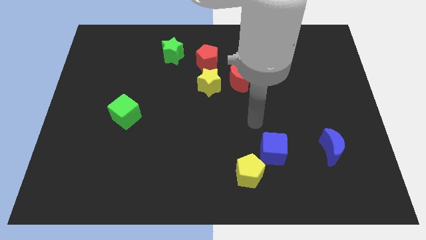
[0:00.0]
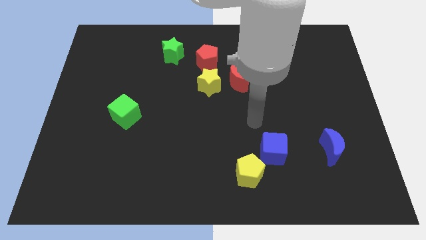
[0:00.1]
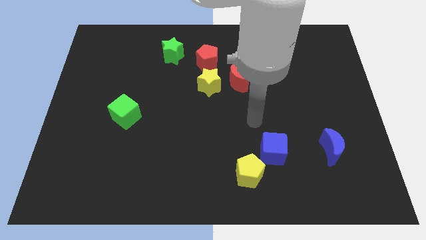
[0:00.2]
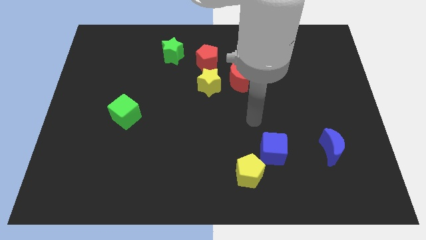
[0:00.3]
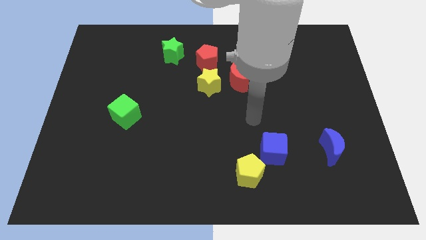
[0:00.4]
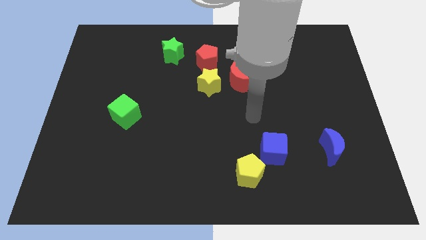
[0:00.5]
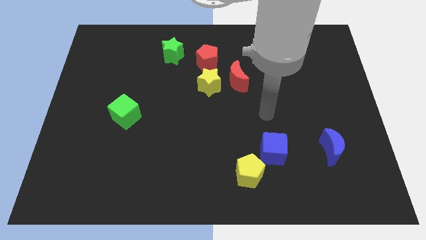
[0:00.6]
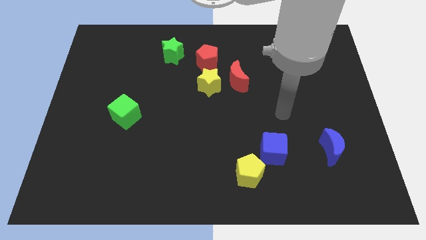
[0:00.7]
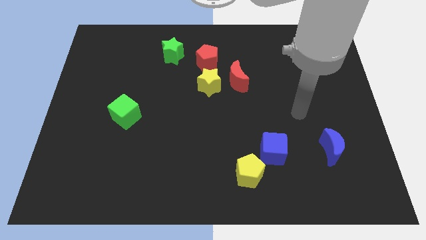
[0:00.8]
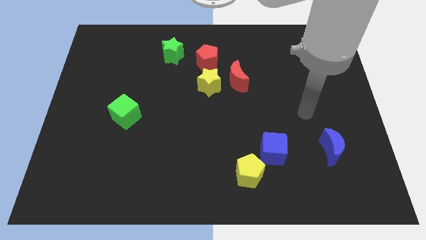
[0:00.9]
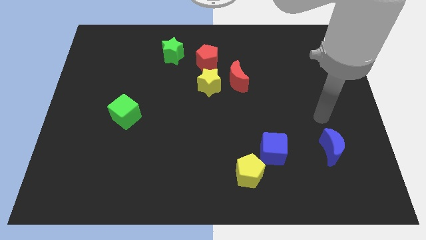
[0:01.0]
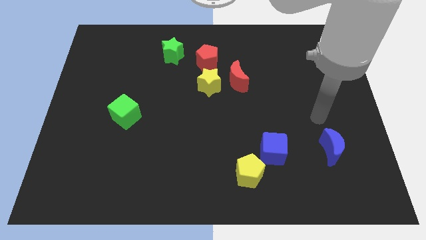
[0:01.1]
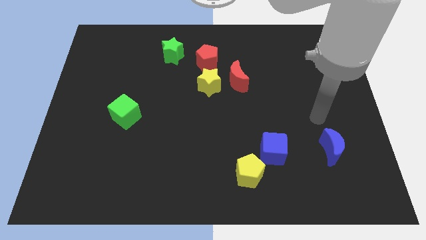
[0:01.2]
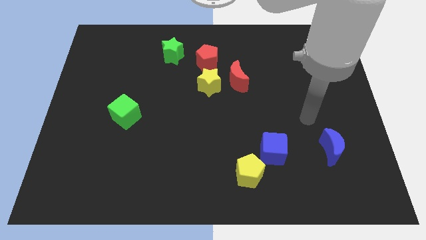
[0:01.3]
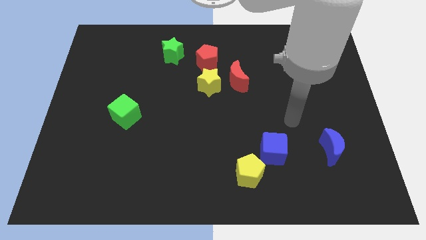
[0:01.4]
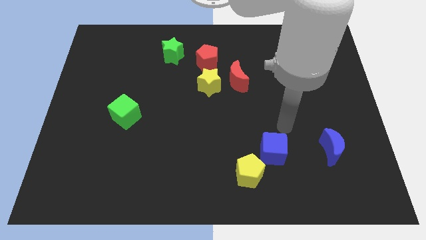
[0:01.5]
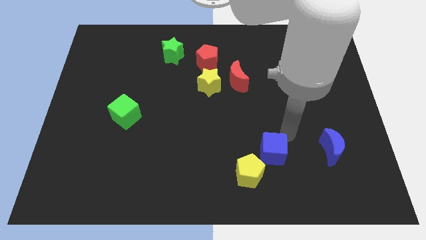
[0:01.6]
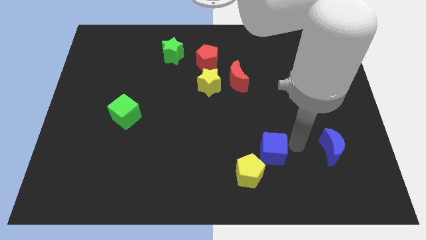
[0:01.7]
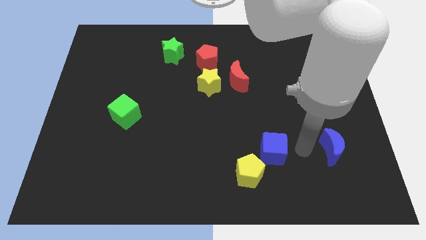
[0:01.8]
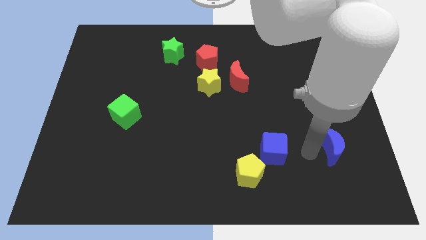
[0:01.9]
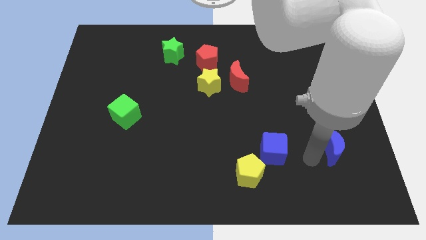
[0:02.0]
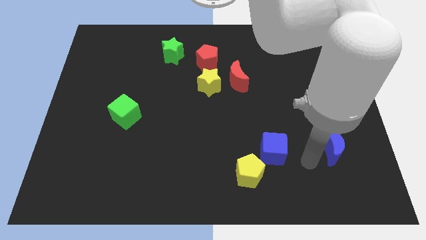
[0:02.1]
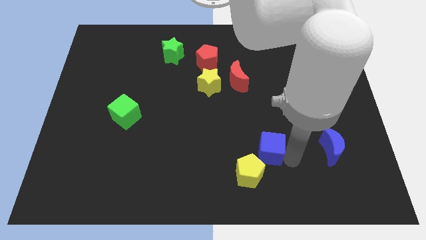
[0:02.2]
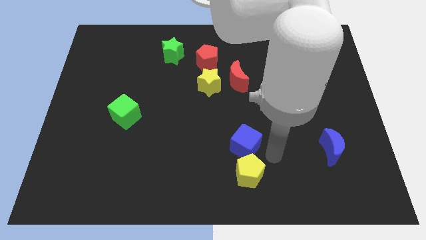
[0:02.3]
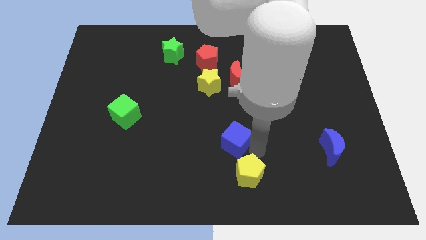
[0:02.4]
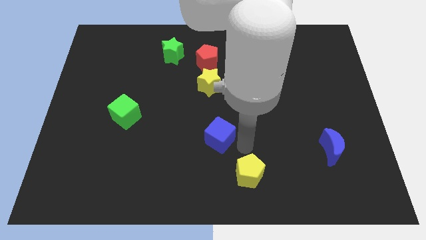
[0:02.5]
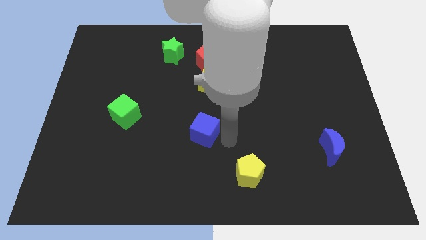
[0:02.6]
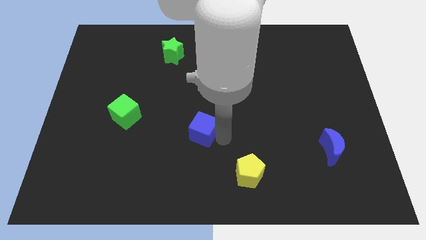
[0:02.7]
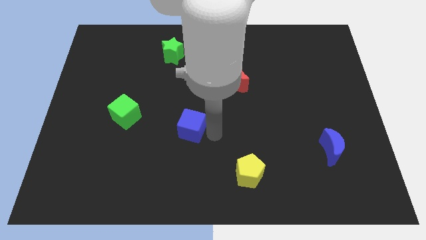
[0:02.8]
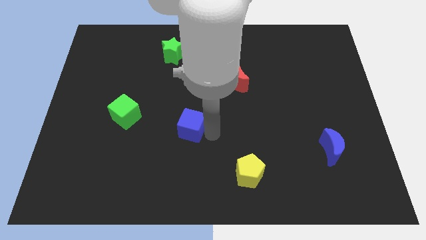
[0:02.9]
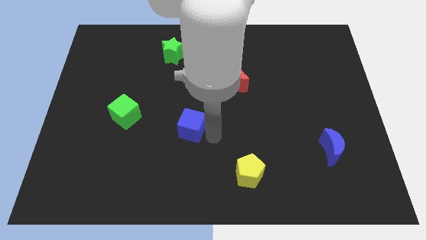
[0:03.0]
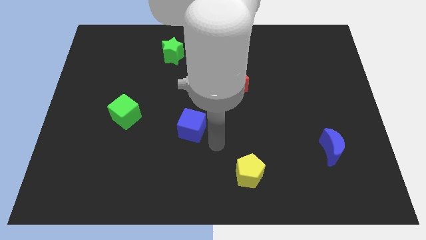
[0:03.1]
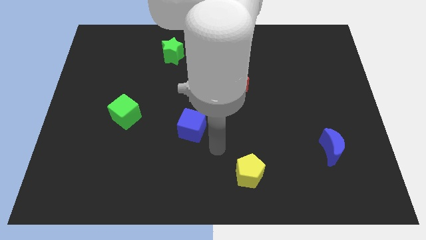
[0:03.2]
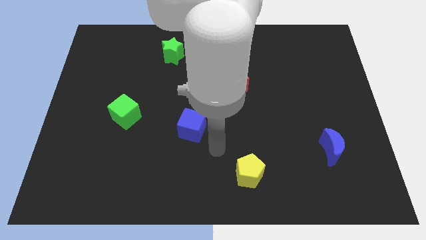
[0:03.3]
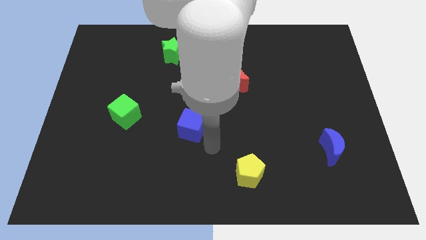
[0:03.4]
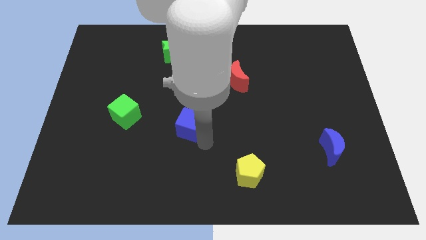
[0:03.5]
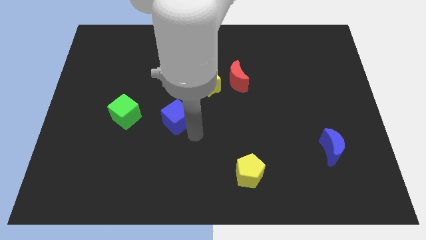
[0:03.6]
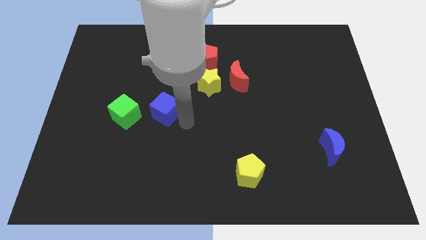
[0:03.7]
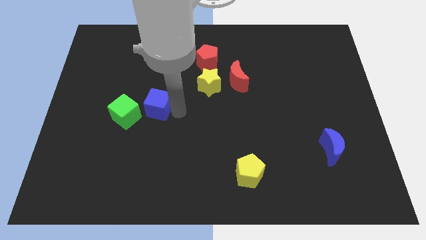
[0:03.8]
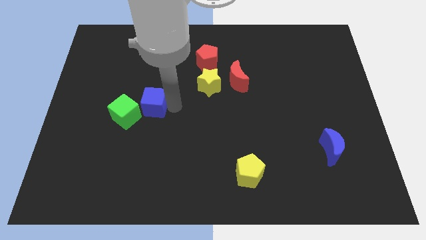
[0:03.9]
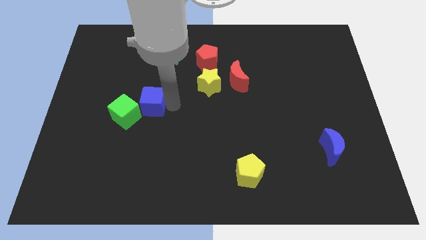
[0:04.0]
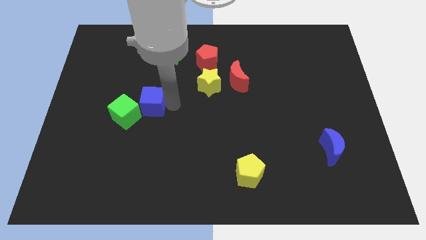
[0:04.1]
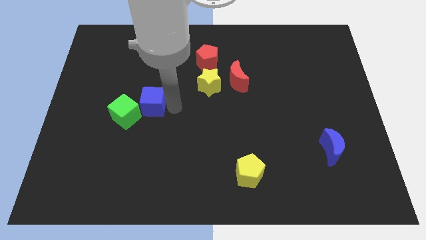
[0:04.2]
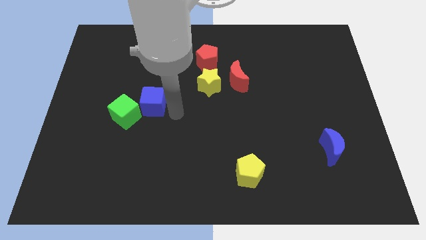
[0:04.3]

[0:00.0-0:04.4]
place the blue cube close to green cube

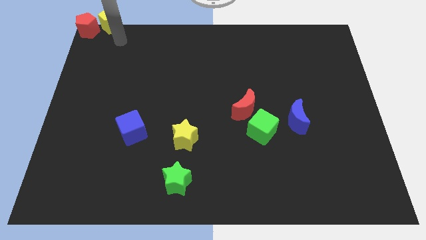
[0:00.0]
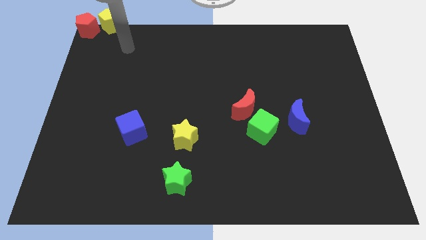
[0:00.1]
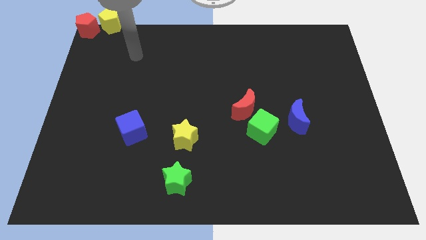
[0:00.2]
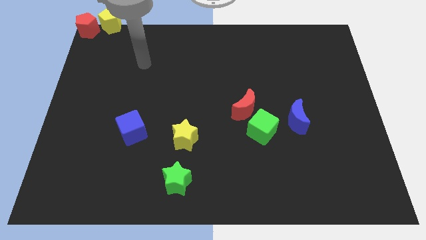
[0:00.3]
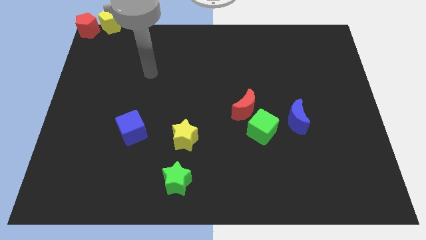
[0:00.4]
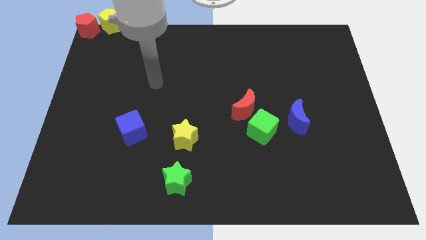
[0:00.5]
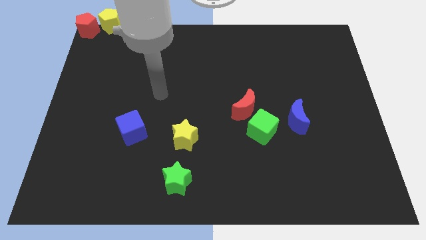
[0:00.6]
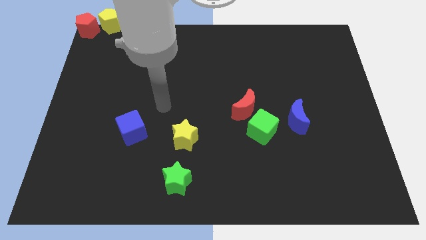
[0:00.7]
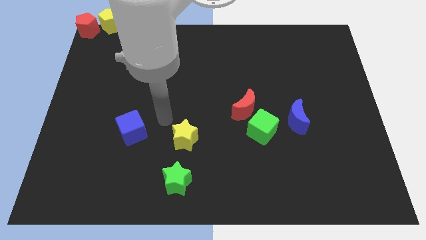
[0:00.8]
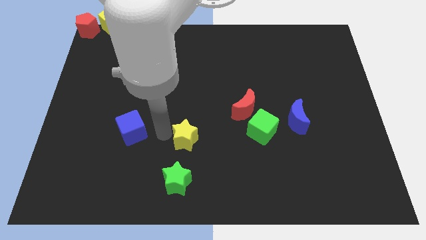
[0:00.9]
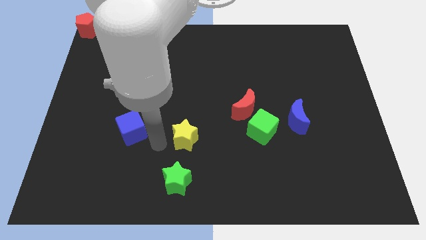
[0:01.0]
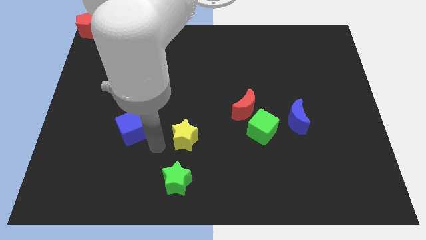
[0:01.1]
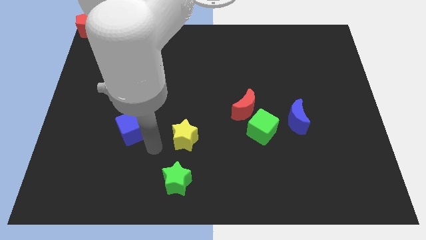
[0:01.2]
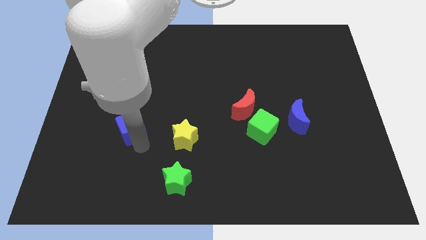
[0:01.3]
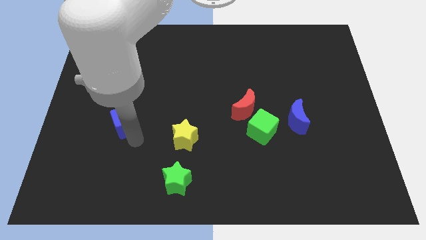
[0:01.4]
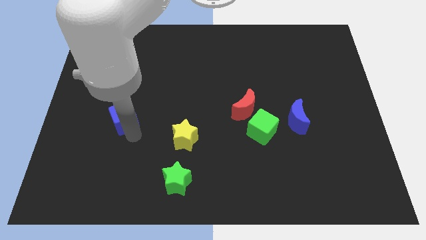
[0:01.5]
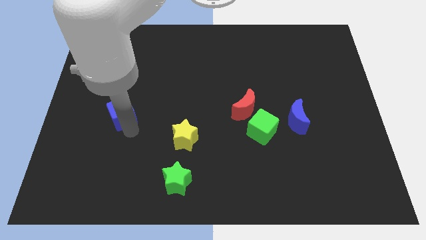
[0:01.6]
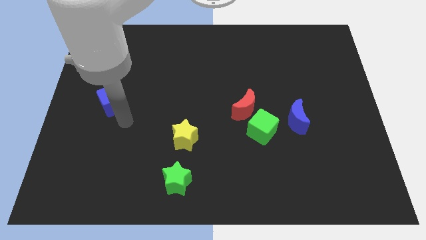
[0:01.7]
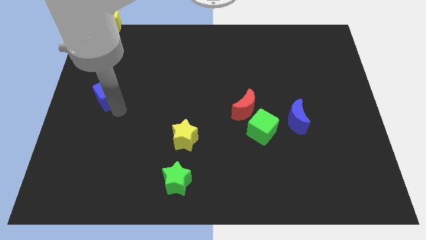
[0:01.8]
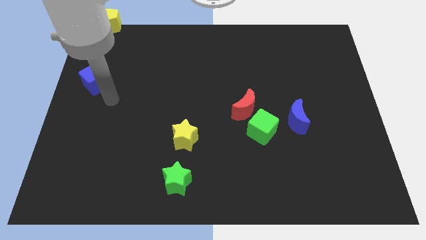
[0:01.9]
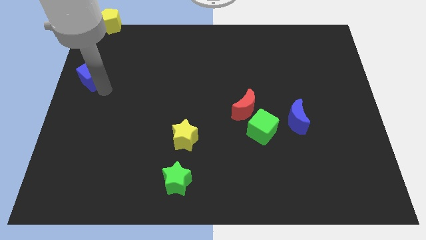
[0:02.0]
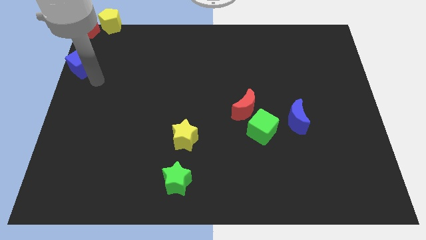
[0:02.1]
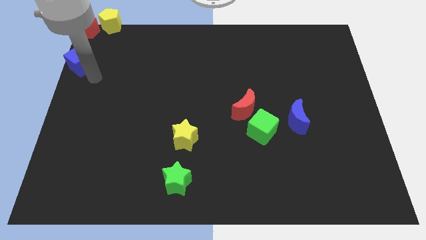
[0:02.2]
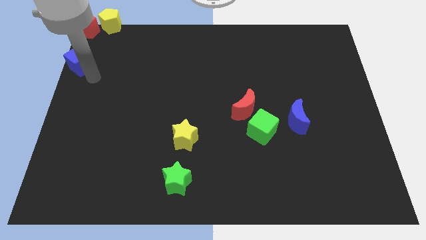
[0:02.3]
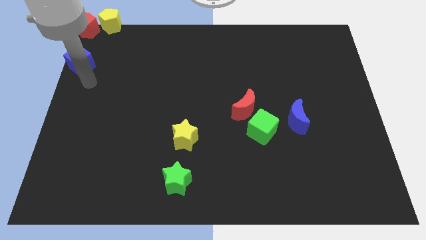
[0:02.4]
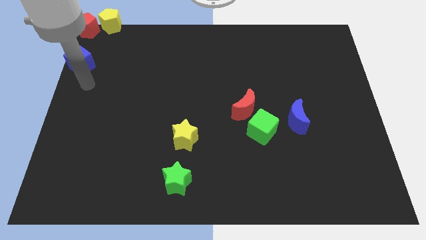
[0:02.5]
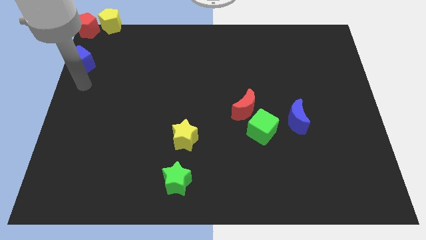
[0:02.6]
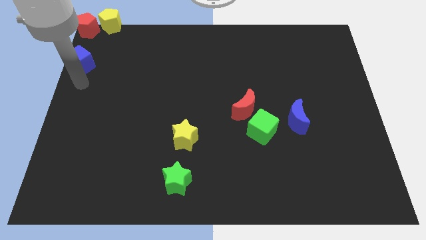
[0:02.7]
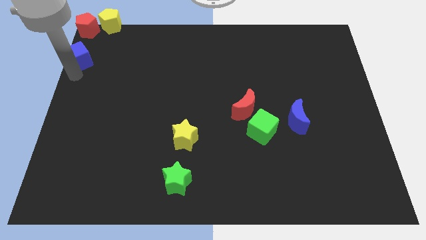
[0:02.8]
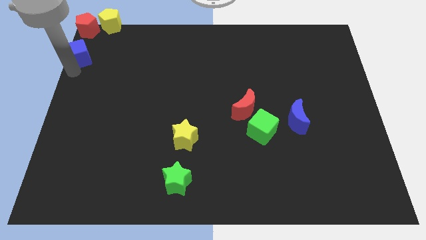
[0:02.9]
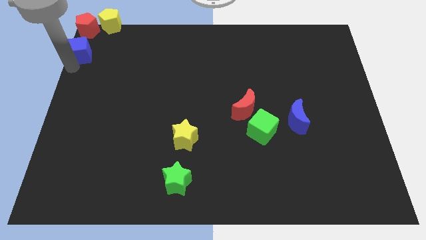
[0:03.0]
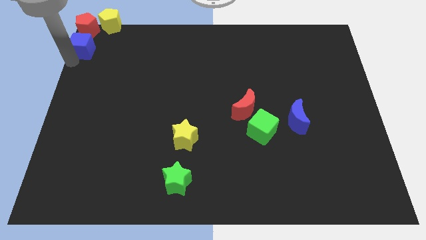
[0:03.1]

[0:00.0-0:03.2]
put the blue cube vertically below the red pentagon

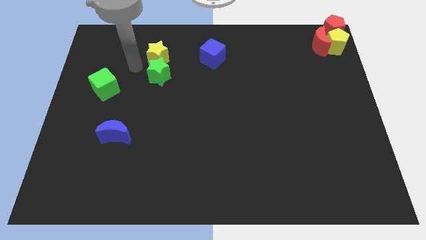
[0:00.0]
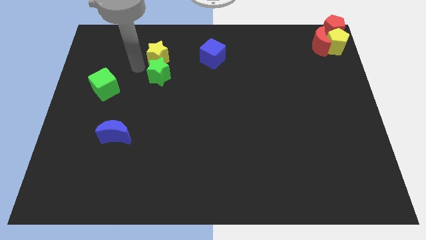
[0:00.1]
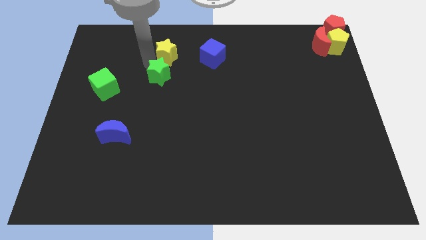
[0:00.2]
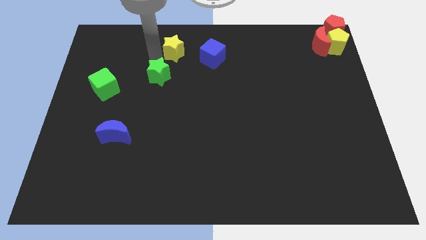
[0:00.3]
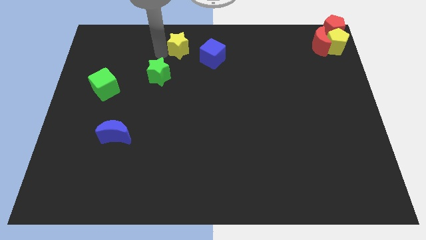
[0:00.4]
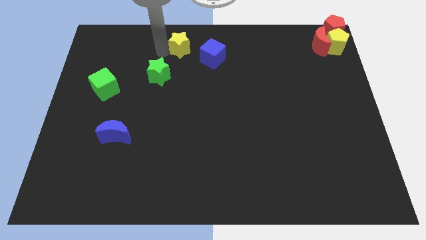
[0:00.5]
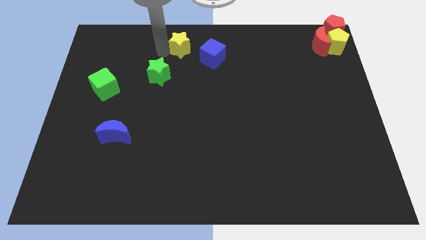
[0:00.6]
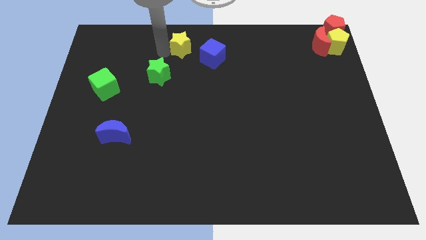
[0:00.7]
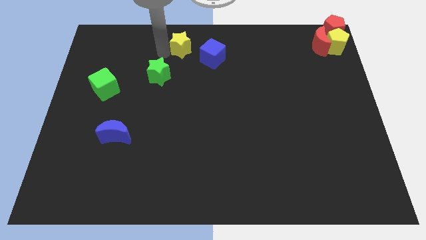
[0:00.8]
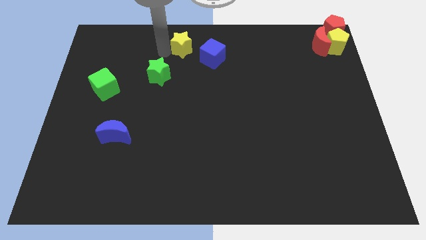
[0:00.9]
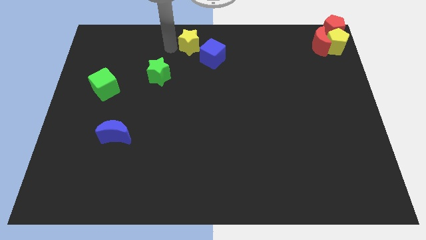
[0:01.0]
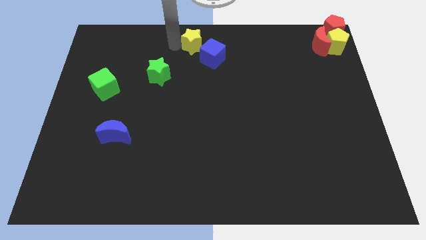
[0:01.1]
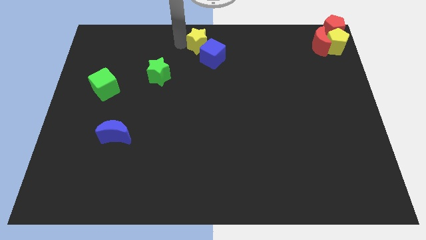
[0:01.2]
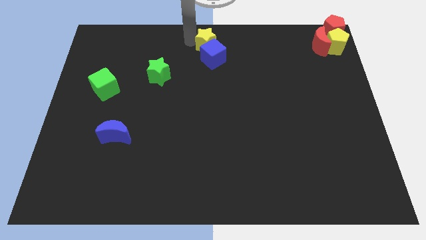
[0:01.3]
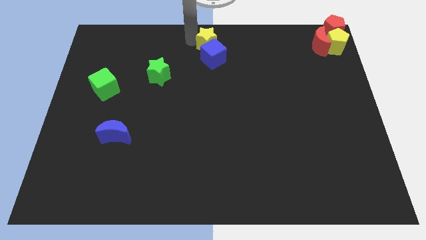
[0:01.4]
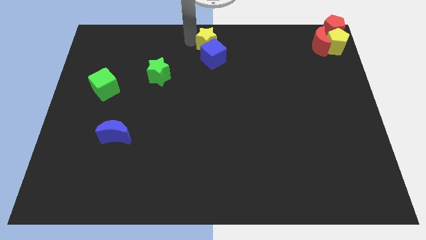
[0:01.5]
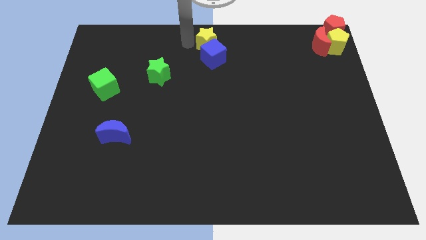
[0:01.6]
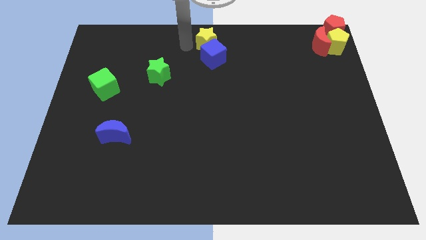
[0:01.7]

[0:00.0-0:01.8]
place the yellow star above the blue cube
